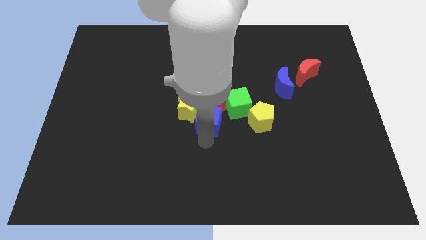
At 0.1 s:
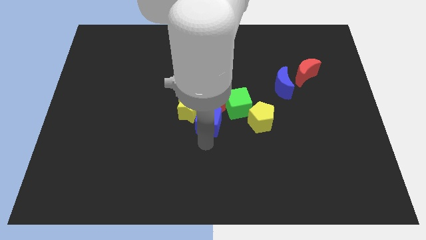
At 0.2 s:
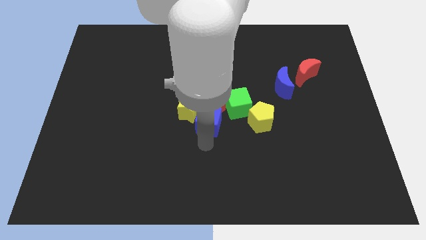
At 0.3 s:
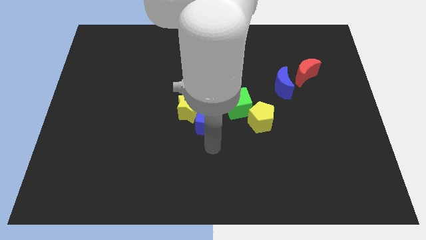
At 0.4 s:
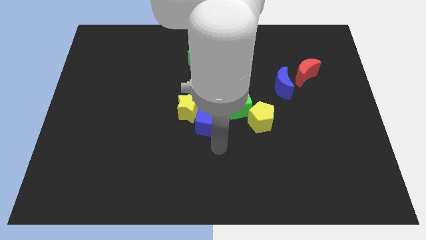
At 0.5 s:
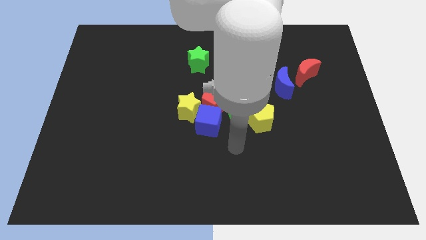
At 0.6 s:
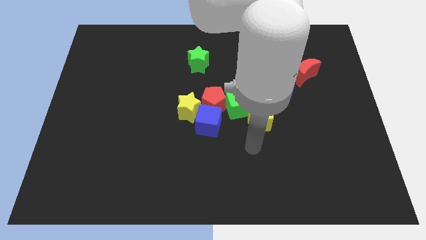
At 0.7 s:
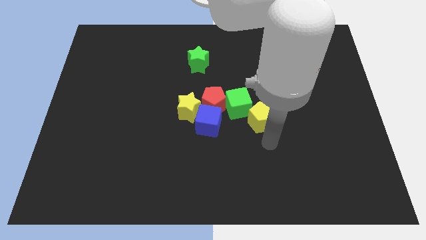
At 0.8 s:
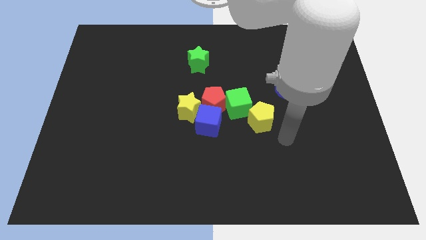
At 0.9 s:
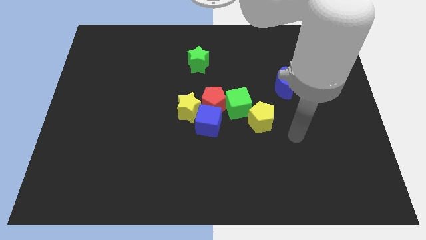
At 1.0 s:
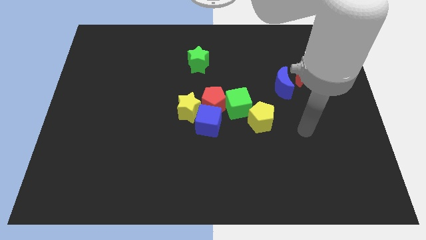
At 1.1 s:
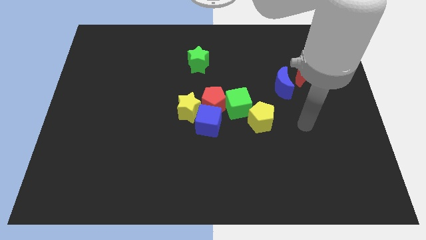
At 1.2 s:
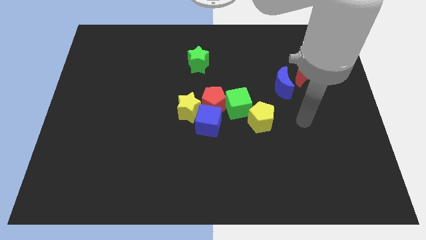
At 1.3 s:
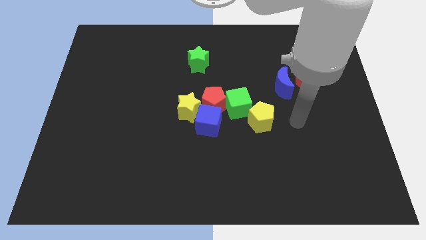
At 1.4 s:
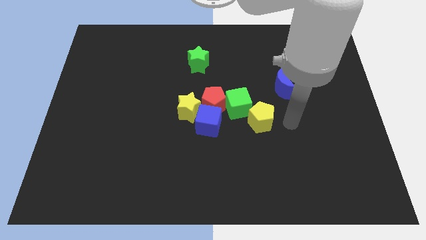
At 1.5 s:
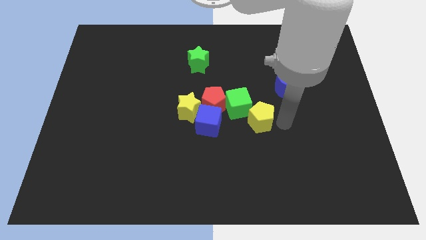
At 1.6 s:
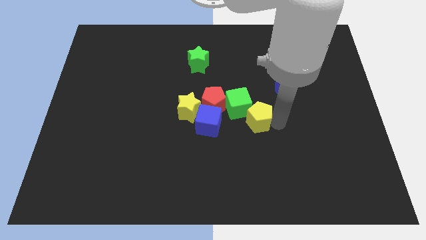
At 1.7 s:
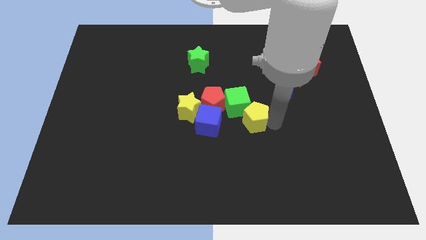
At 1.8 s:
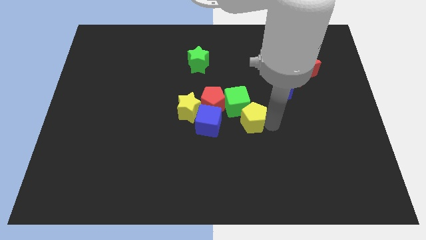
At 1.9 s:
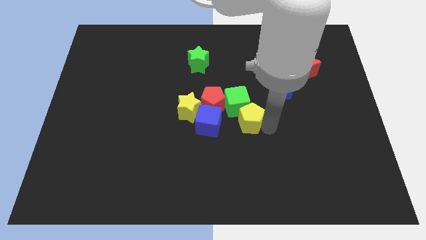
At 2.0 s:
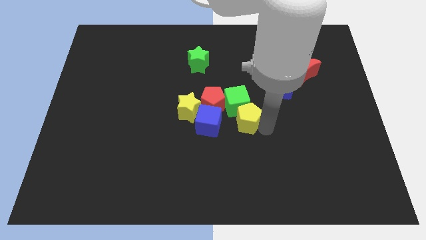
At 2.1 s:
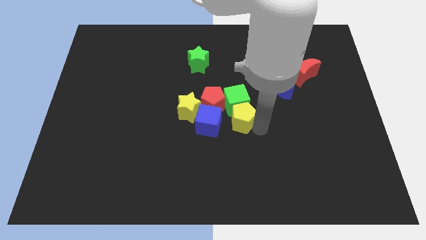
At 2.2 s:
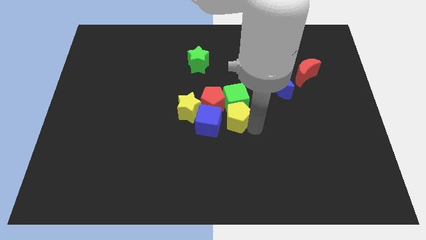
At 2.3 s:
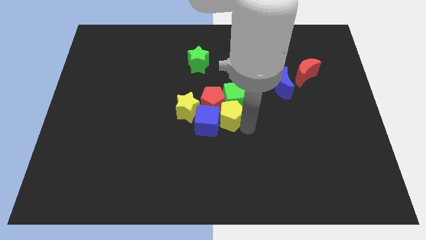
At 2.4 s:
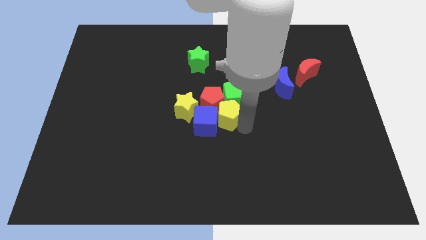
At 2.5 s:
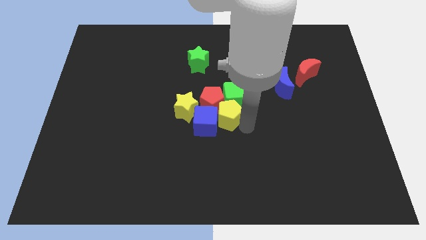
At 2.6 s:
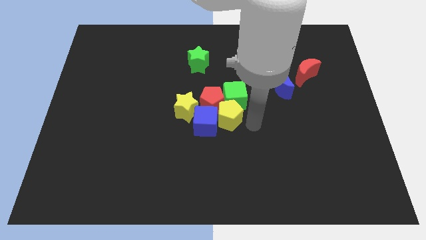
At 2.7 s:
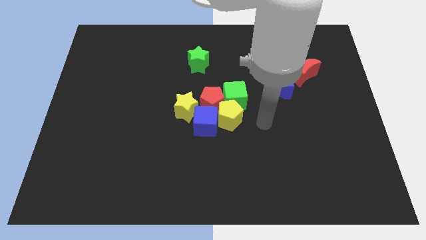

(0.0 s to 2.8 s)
push the yellow pentagon to the bottom of the green cube

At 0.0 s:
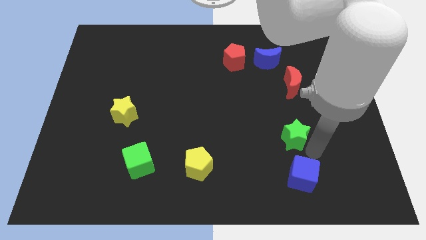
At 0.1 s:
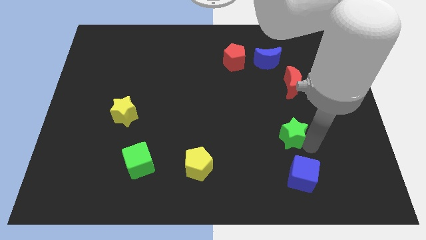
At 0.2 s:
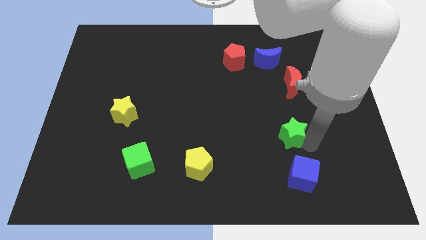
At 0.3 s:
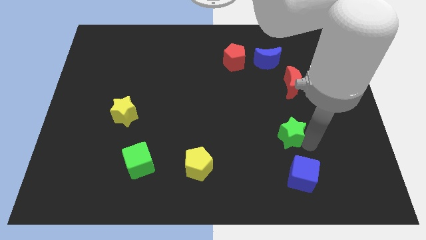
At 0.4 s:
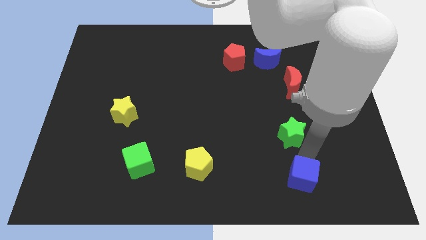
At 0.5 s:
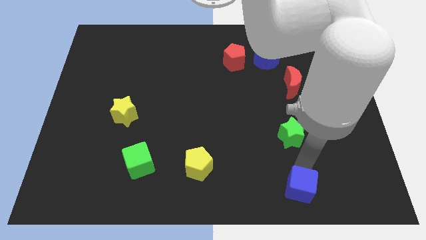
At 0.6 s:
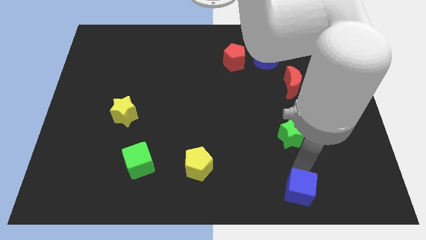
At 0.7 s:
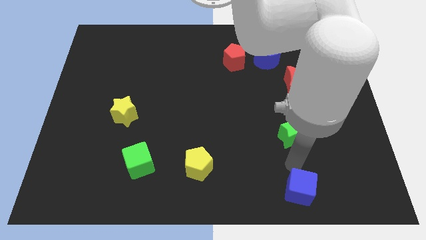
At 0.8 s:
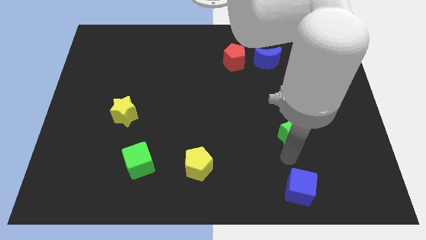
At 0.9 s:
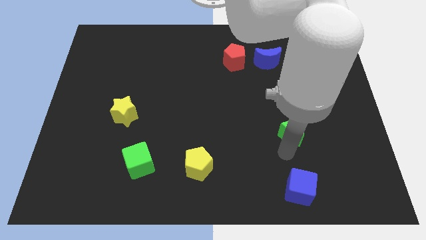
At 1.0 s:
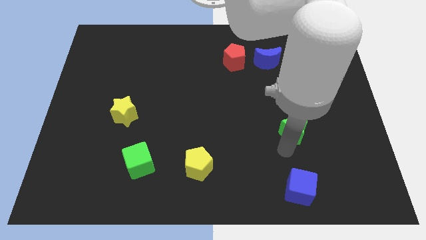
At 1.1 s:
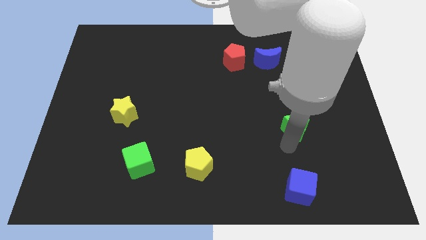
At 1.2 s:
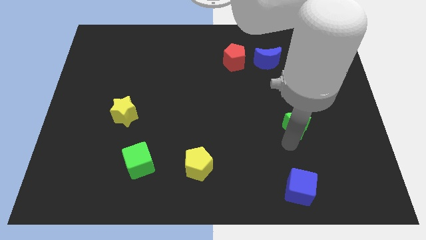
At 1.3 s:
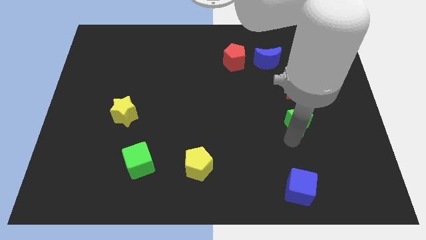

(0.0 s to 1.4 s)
move blue cube slightly down

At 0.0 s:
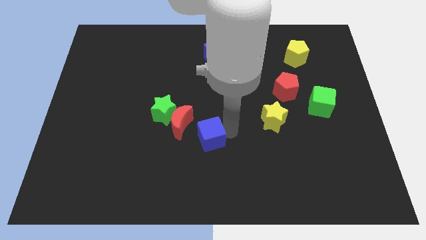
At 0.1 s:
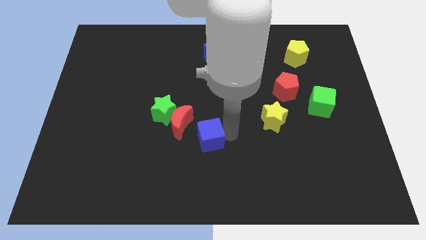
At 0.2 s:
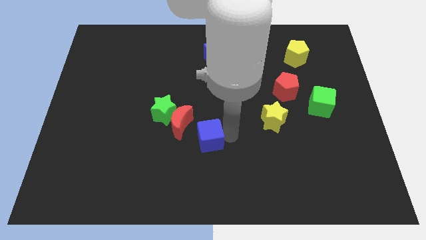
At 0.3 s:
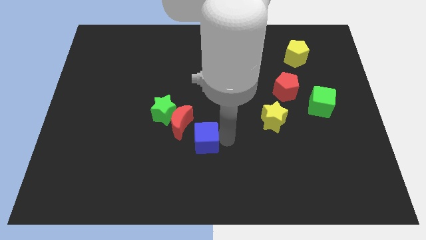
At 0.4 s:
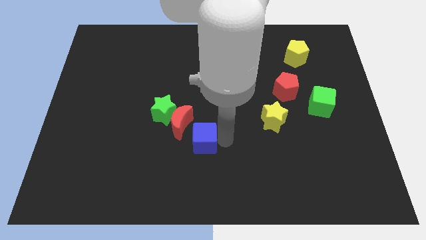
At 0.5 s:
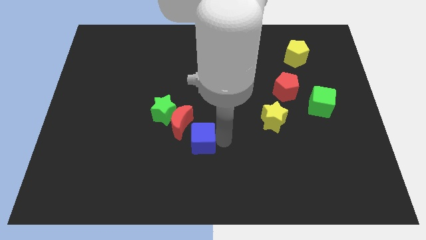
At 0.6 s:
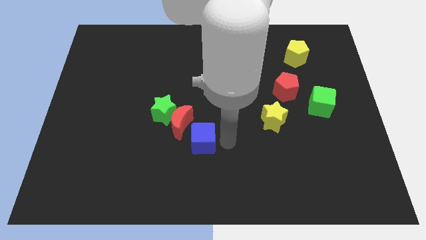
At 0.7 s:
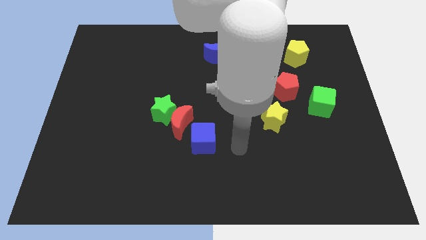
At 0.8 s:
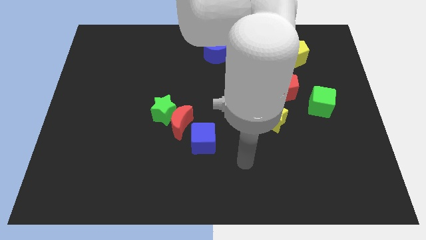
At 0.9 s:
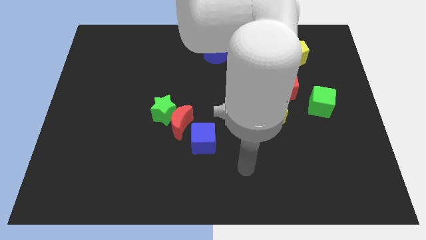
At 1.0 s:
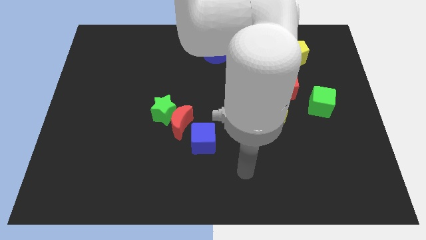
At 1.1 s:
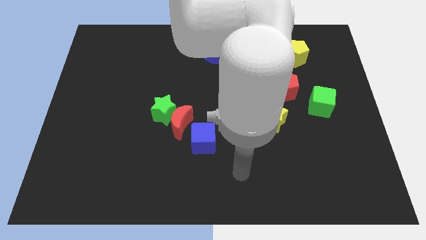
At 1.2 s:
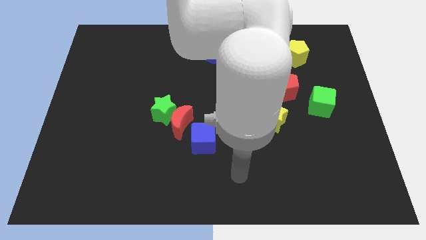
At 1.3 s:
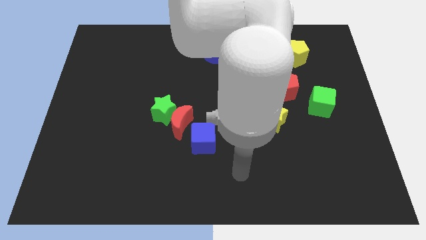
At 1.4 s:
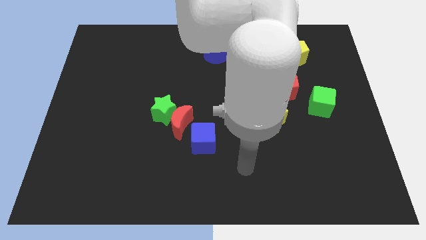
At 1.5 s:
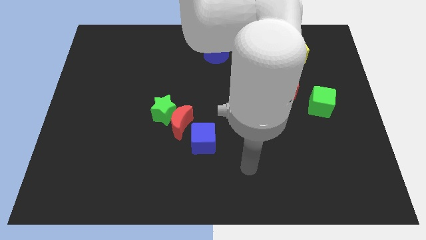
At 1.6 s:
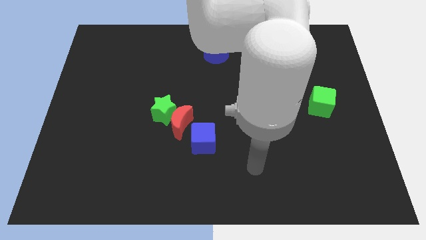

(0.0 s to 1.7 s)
push blue cube to the right of red crescent

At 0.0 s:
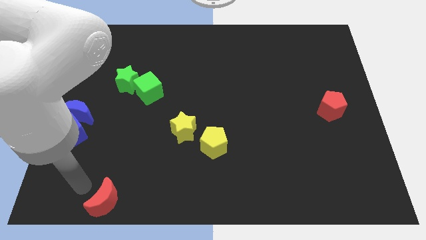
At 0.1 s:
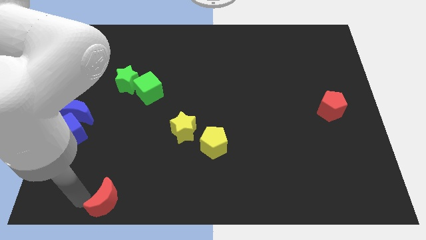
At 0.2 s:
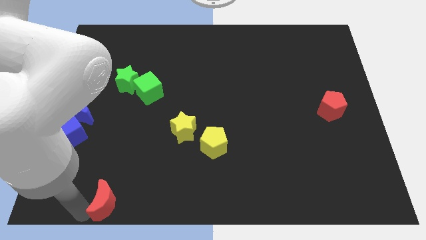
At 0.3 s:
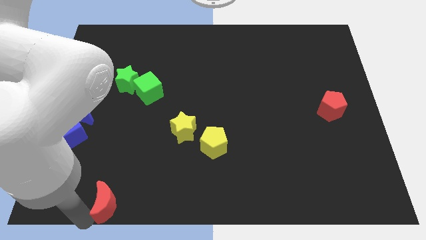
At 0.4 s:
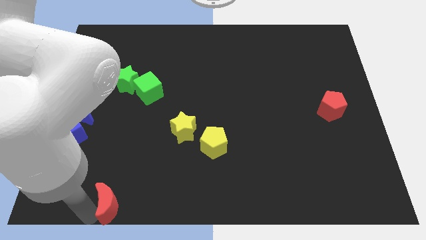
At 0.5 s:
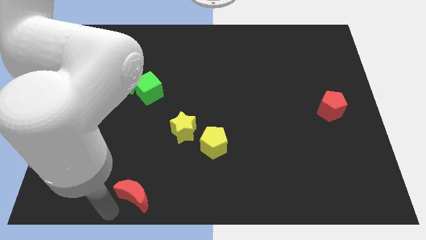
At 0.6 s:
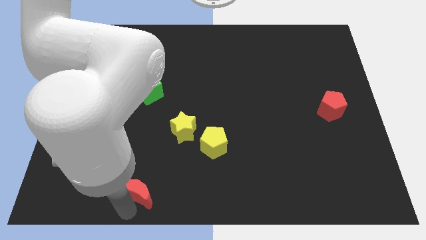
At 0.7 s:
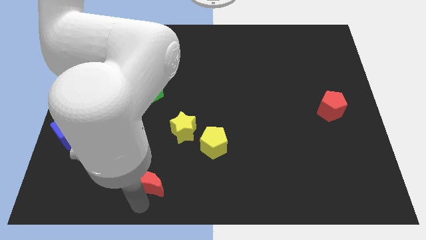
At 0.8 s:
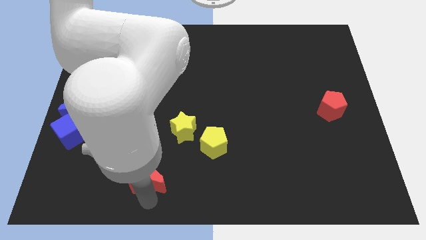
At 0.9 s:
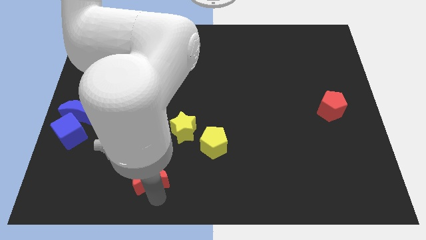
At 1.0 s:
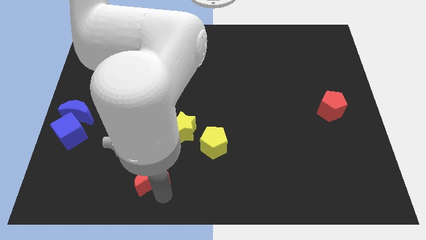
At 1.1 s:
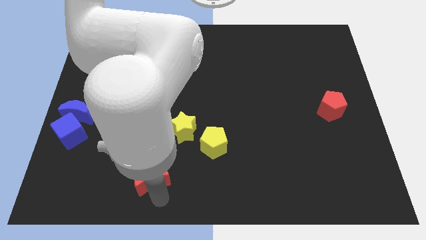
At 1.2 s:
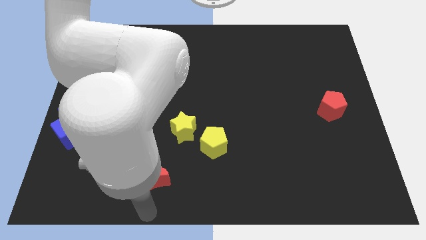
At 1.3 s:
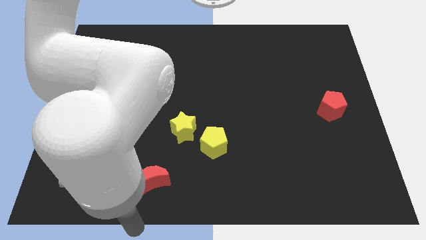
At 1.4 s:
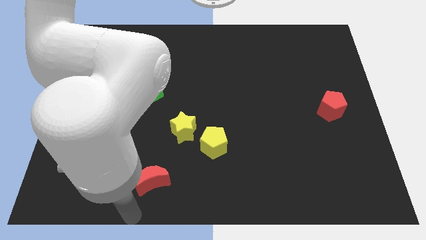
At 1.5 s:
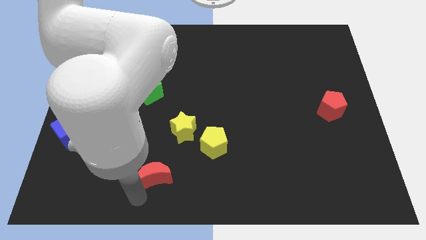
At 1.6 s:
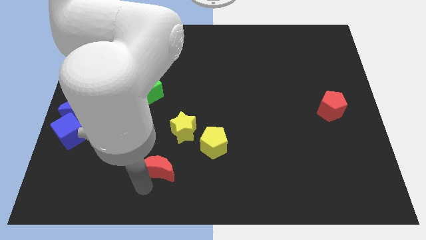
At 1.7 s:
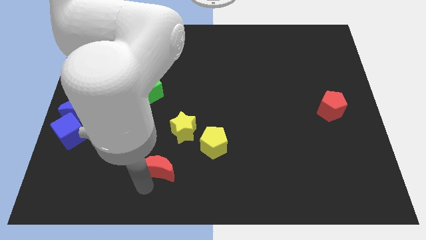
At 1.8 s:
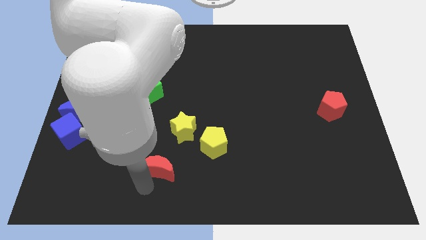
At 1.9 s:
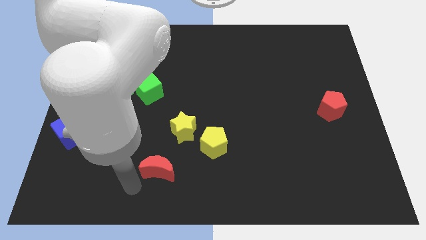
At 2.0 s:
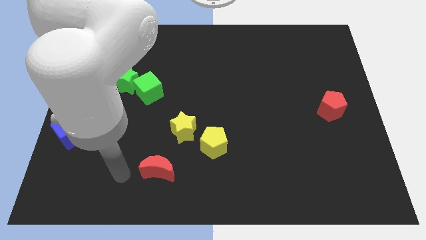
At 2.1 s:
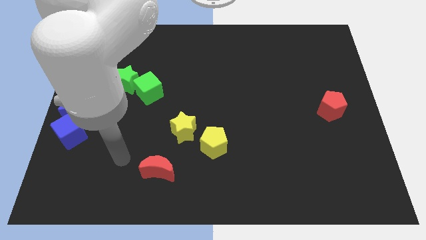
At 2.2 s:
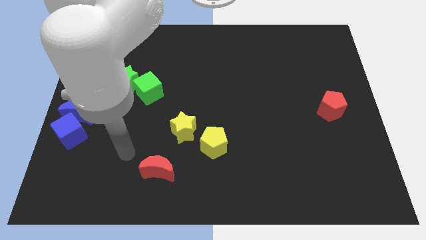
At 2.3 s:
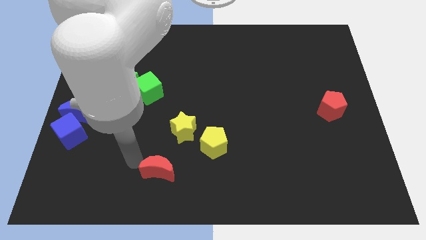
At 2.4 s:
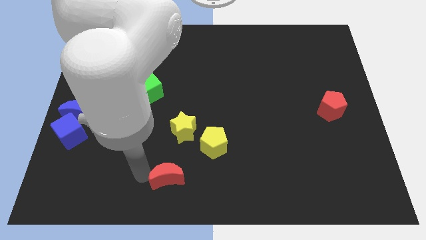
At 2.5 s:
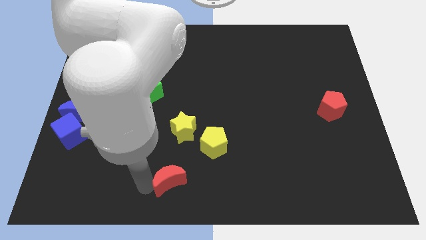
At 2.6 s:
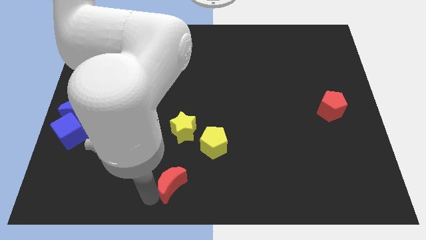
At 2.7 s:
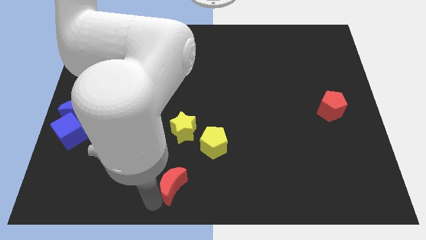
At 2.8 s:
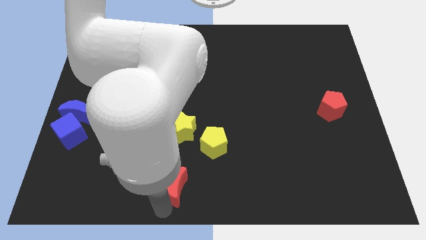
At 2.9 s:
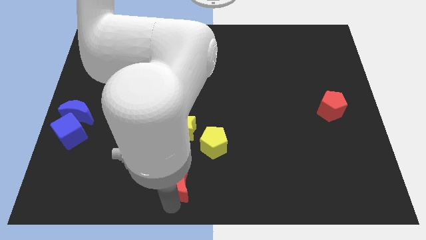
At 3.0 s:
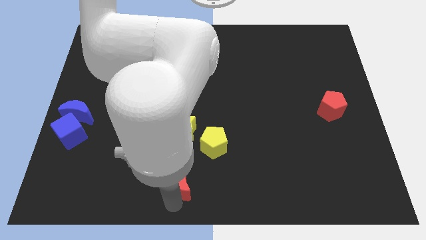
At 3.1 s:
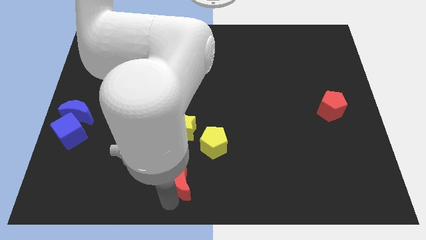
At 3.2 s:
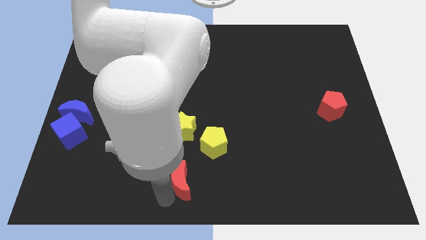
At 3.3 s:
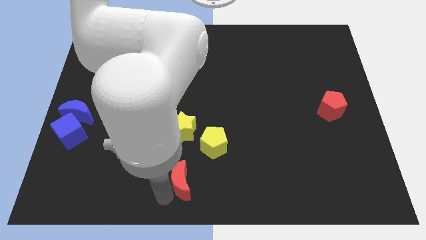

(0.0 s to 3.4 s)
place the red crescent vertical to the yellow star
